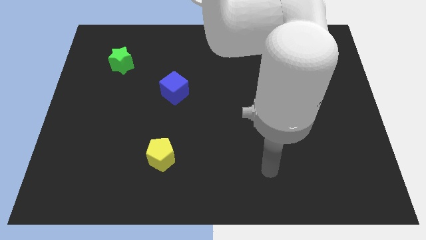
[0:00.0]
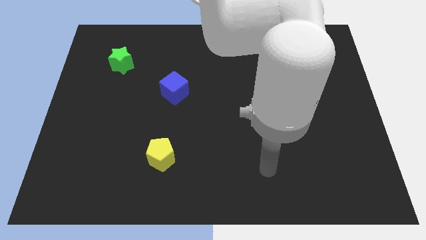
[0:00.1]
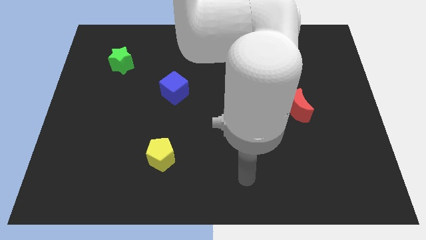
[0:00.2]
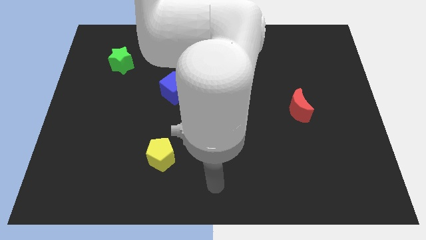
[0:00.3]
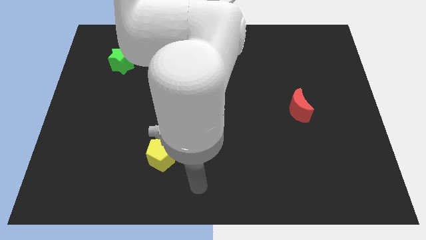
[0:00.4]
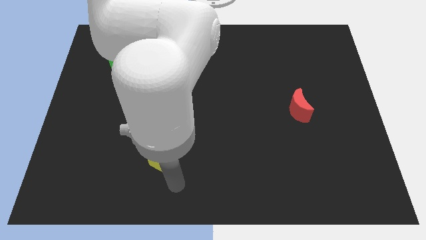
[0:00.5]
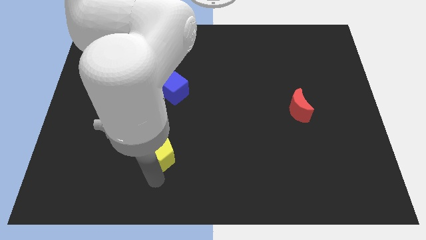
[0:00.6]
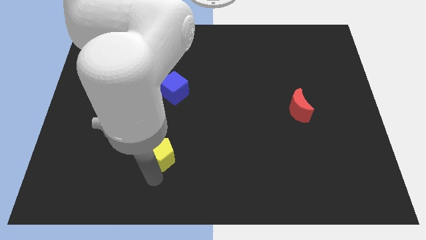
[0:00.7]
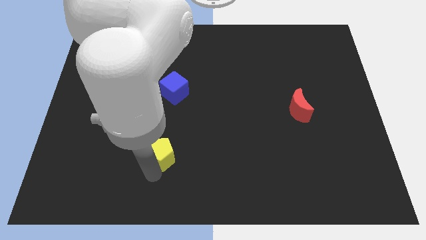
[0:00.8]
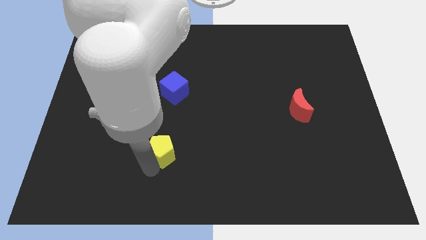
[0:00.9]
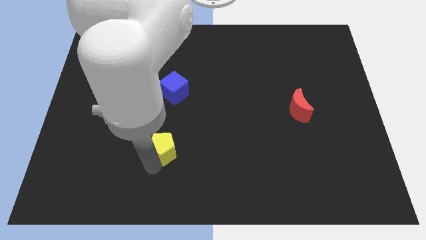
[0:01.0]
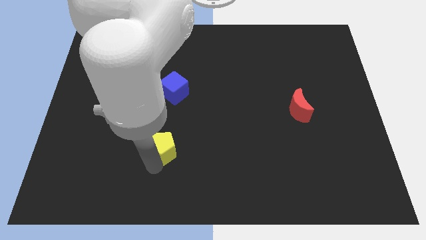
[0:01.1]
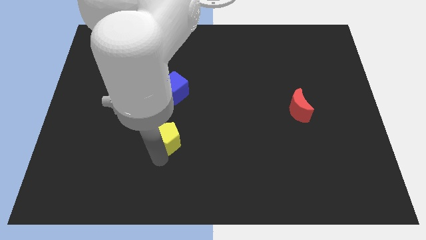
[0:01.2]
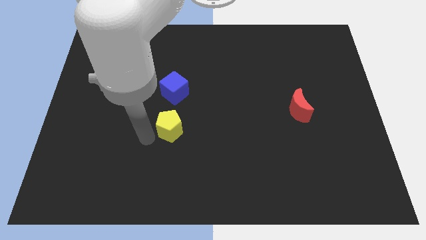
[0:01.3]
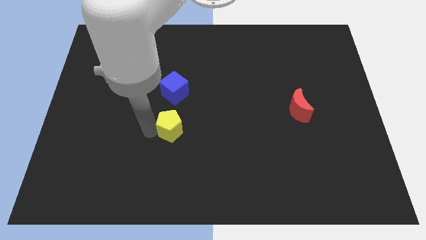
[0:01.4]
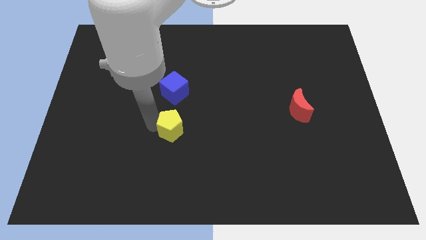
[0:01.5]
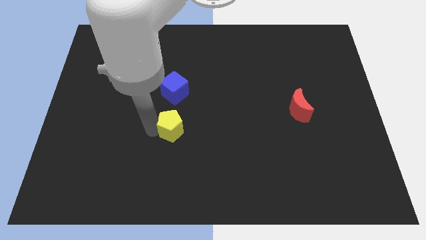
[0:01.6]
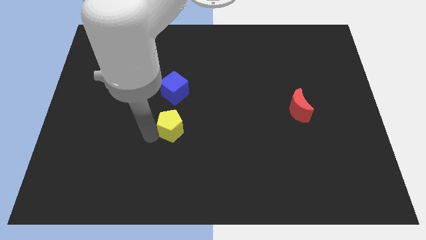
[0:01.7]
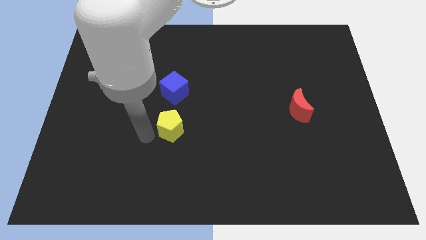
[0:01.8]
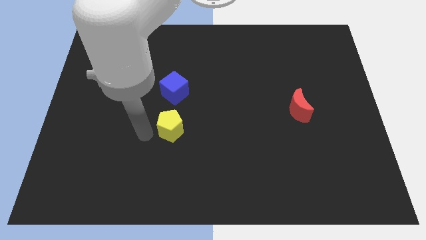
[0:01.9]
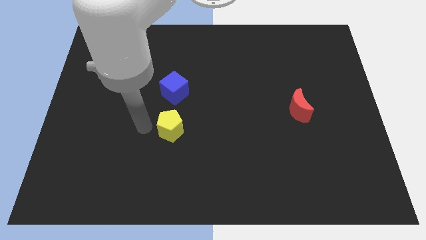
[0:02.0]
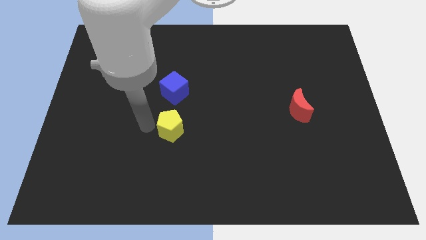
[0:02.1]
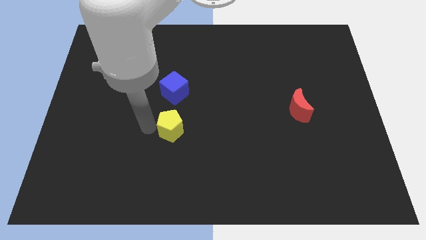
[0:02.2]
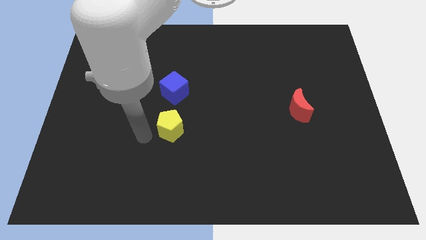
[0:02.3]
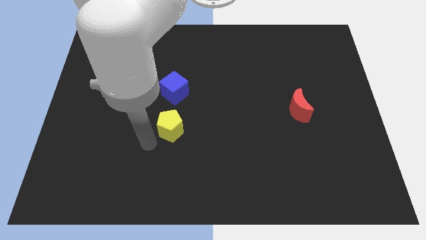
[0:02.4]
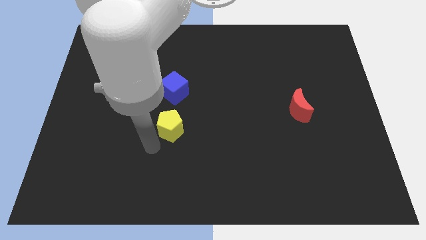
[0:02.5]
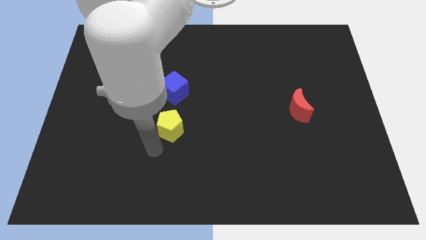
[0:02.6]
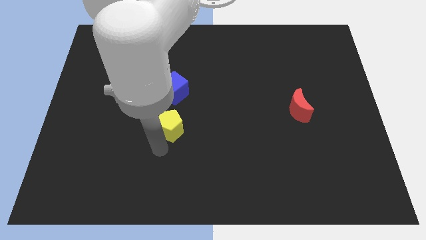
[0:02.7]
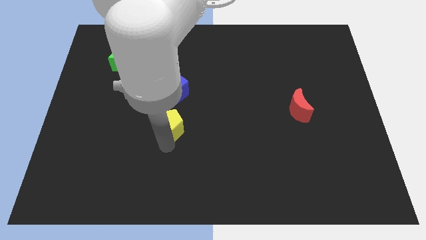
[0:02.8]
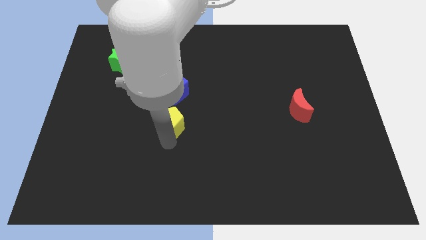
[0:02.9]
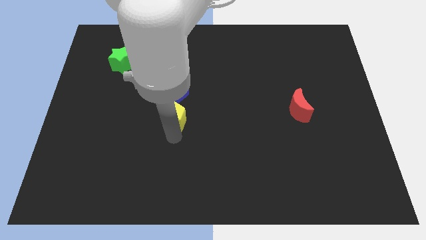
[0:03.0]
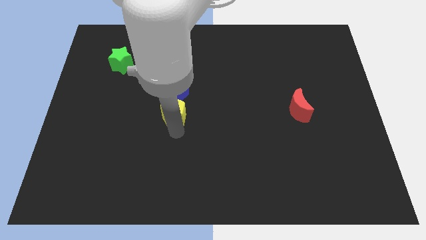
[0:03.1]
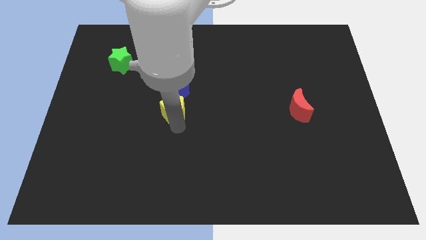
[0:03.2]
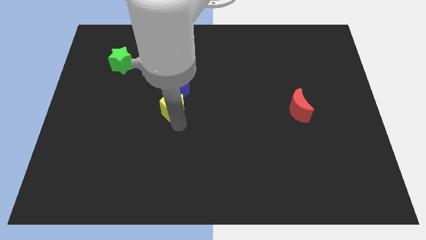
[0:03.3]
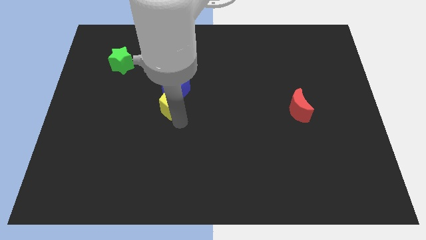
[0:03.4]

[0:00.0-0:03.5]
slide the yellow pentagon next to the cube

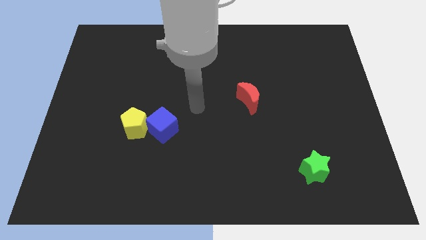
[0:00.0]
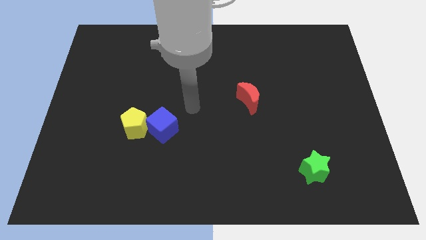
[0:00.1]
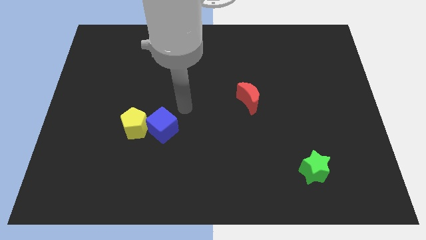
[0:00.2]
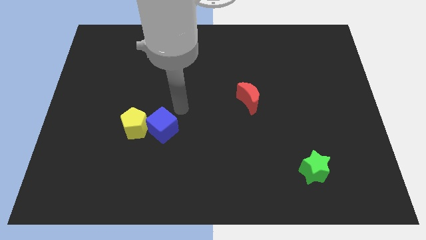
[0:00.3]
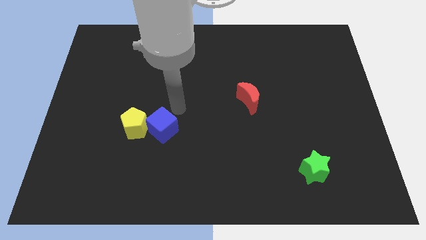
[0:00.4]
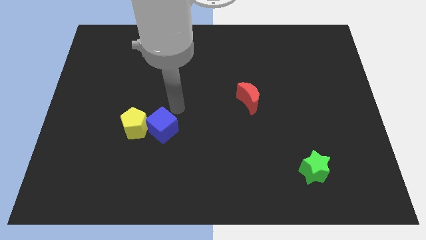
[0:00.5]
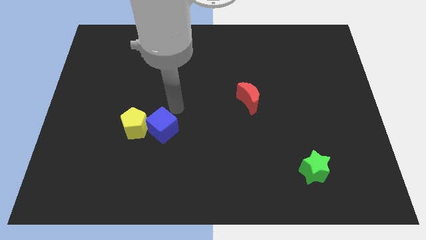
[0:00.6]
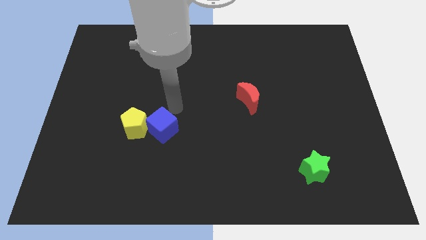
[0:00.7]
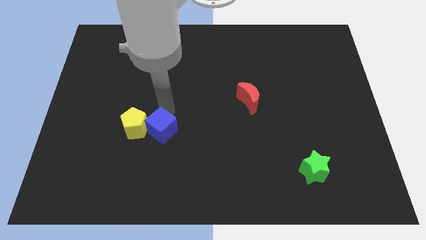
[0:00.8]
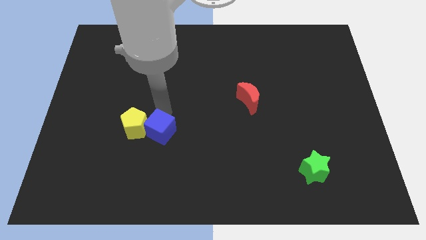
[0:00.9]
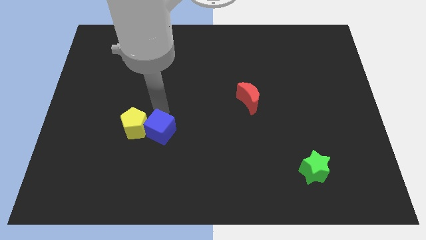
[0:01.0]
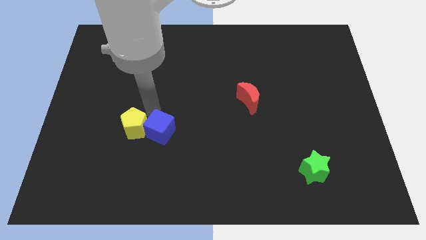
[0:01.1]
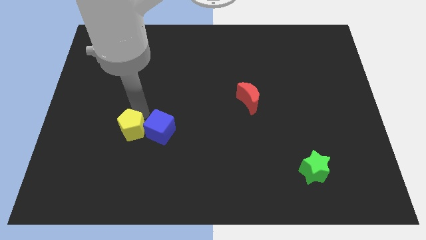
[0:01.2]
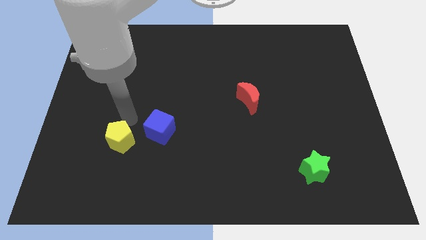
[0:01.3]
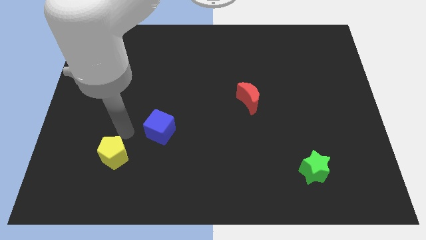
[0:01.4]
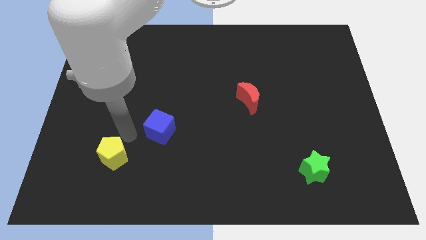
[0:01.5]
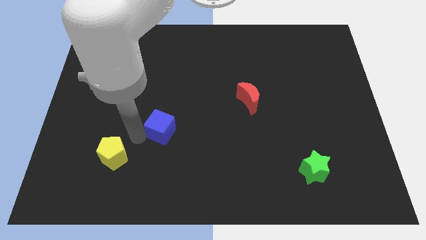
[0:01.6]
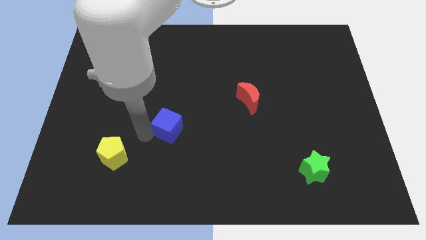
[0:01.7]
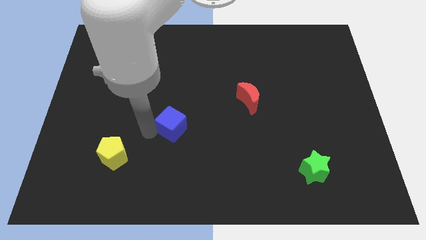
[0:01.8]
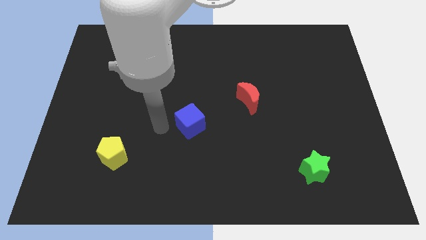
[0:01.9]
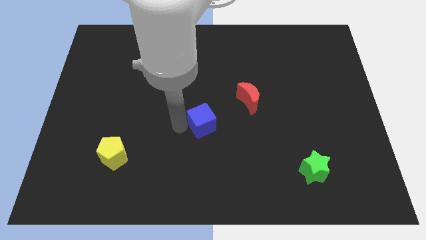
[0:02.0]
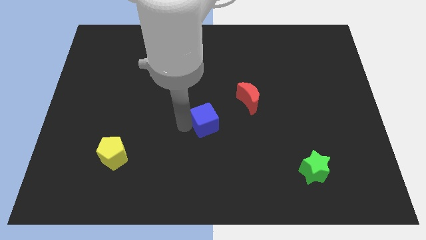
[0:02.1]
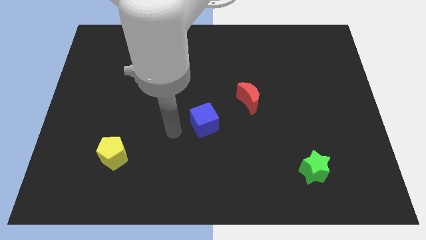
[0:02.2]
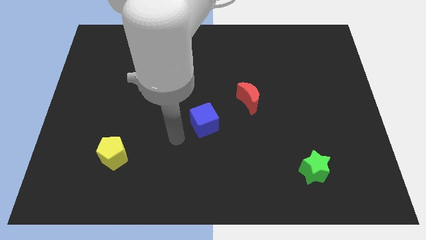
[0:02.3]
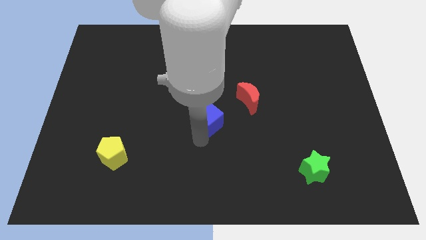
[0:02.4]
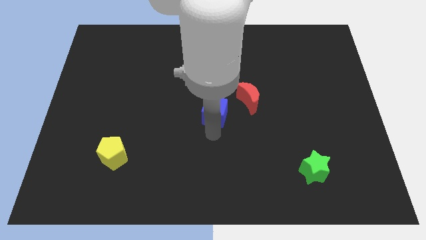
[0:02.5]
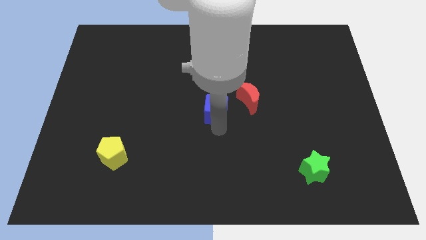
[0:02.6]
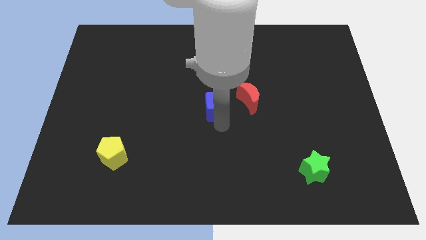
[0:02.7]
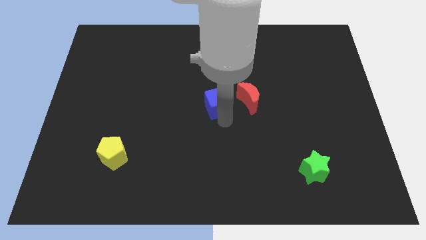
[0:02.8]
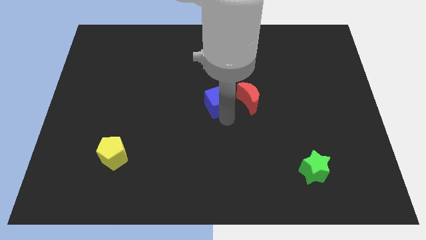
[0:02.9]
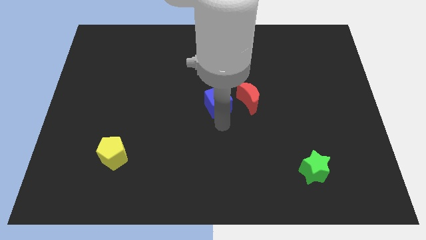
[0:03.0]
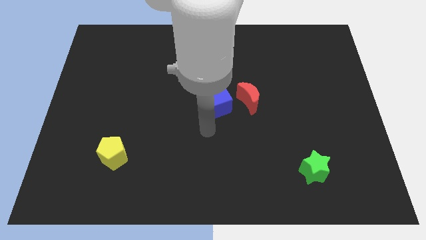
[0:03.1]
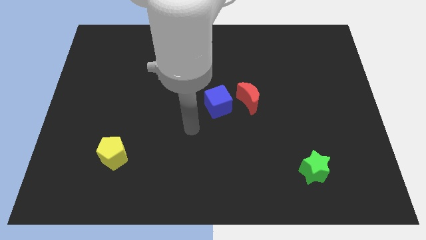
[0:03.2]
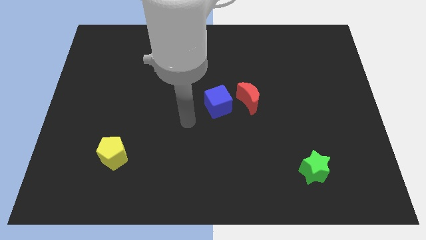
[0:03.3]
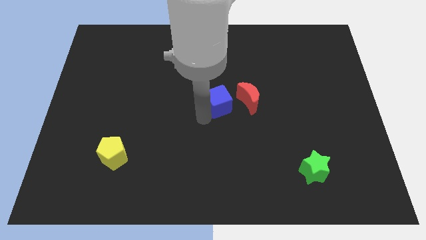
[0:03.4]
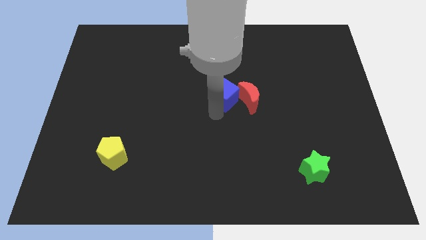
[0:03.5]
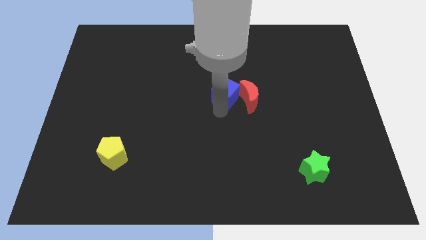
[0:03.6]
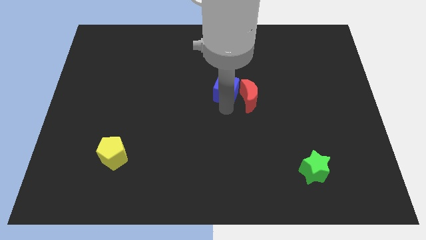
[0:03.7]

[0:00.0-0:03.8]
put the blue block next to the red moon

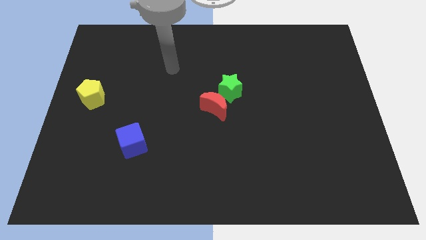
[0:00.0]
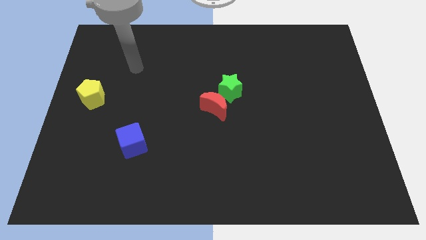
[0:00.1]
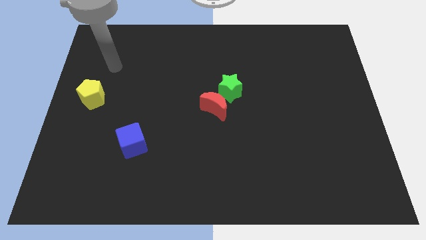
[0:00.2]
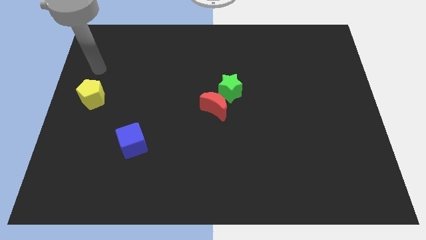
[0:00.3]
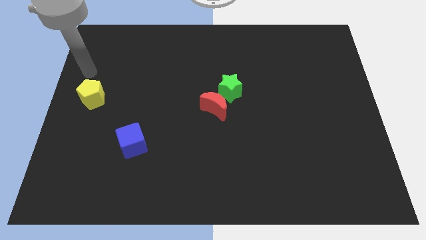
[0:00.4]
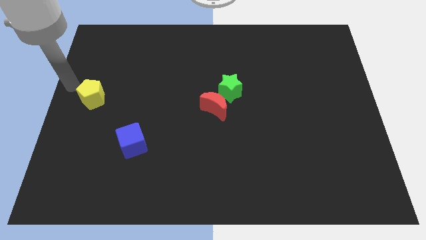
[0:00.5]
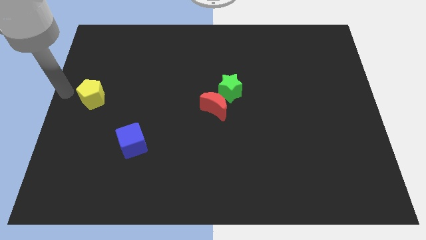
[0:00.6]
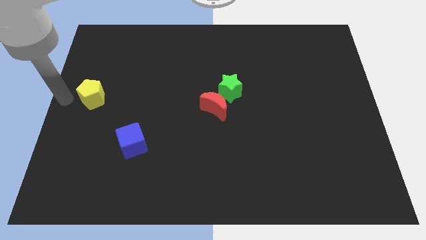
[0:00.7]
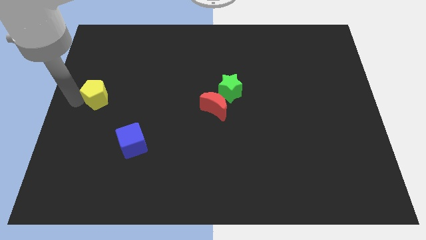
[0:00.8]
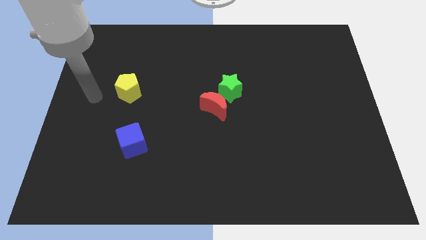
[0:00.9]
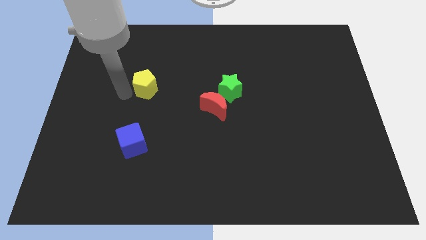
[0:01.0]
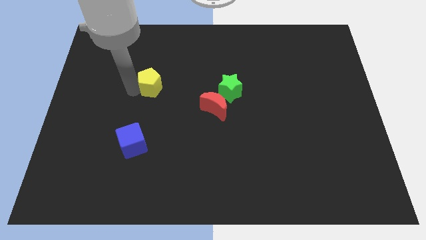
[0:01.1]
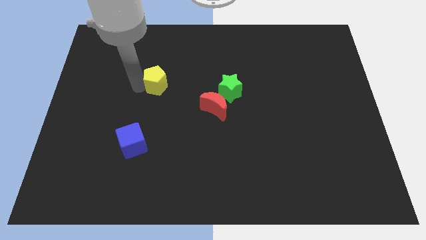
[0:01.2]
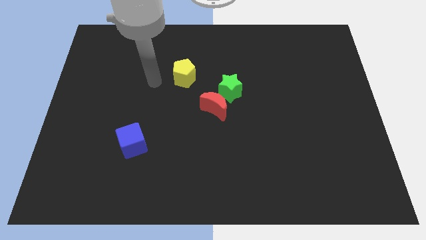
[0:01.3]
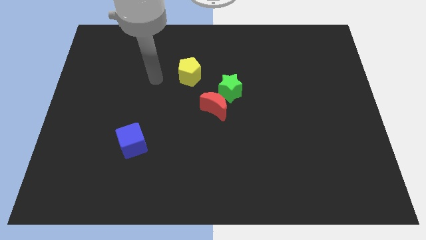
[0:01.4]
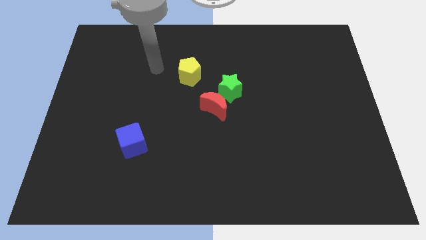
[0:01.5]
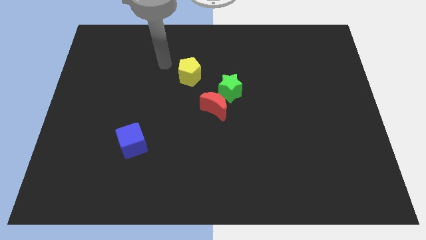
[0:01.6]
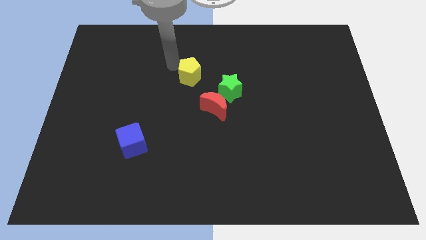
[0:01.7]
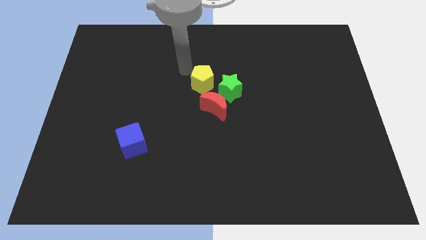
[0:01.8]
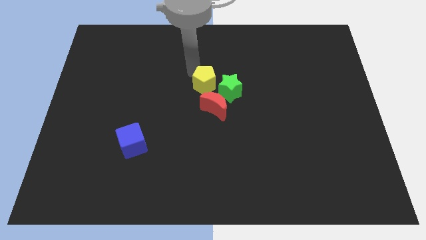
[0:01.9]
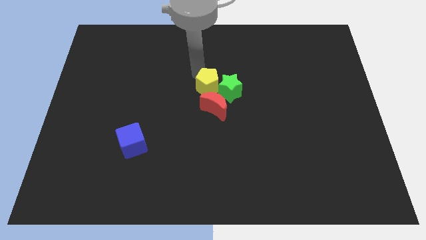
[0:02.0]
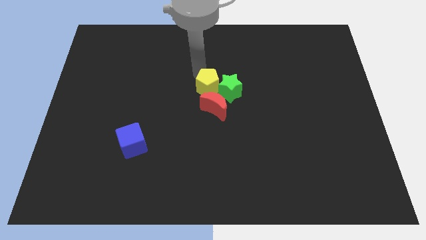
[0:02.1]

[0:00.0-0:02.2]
slide the yellow pentagon to the green block
